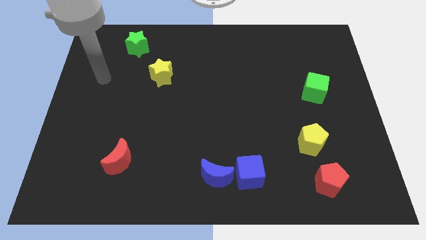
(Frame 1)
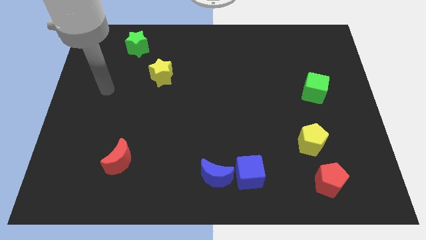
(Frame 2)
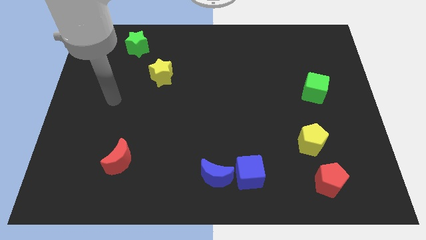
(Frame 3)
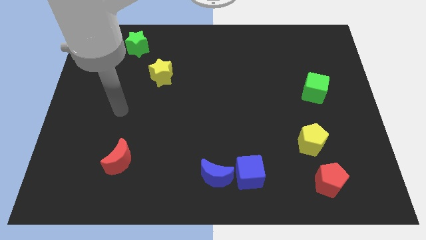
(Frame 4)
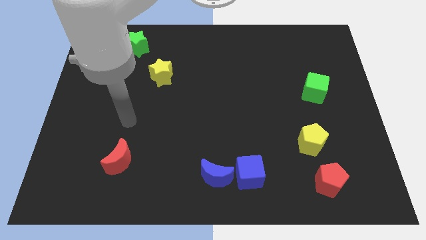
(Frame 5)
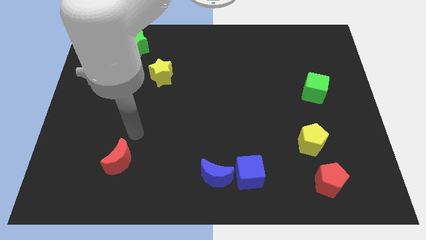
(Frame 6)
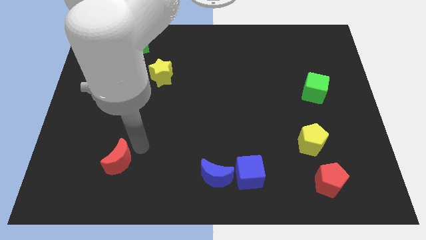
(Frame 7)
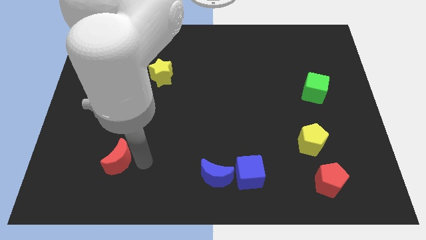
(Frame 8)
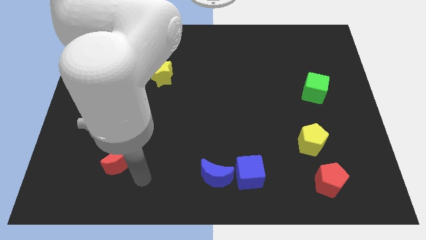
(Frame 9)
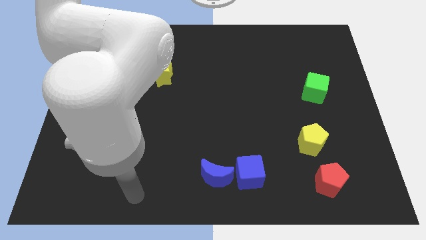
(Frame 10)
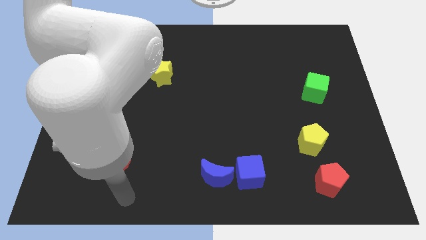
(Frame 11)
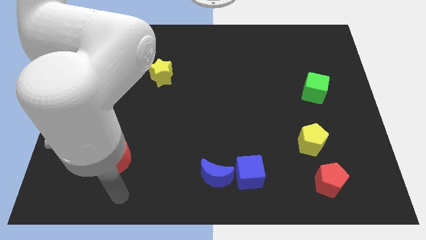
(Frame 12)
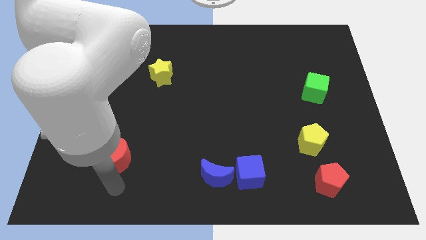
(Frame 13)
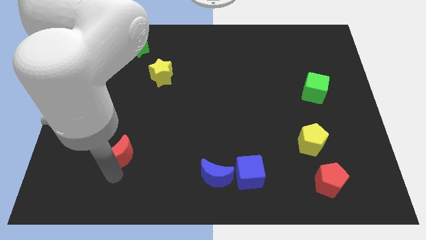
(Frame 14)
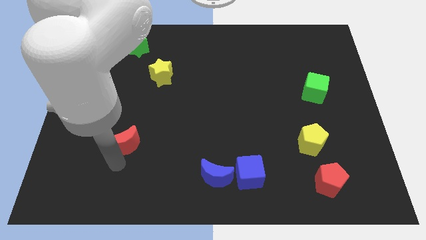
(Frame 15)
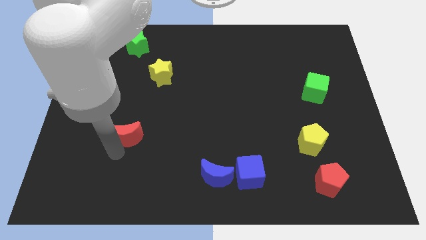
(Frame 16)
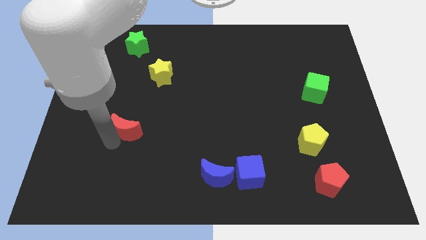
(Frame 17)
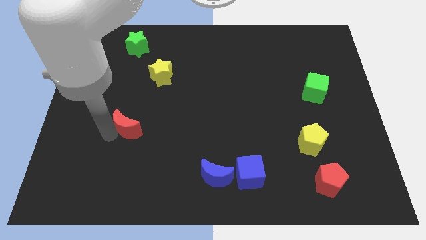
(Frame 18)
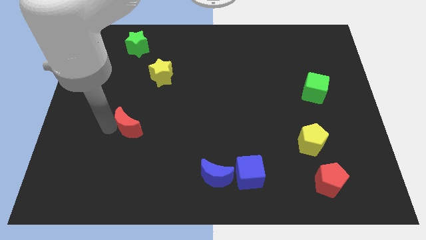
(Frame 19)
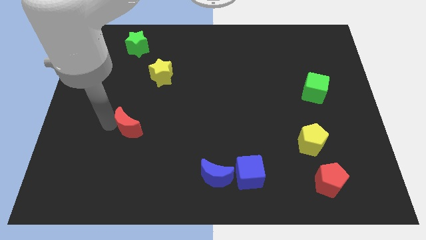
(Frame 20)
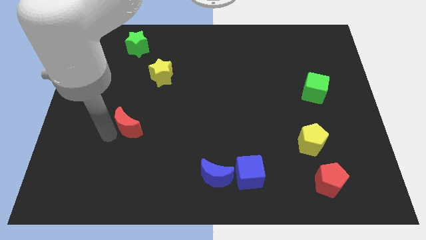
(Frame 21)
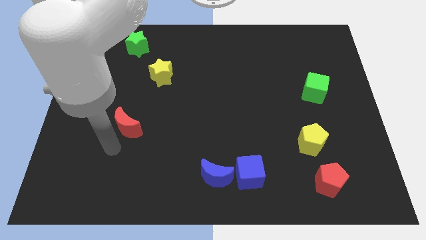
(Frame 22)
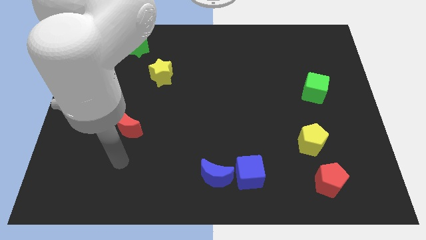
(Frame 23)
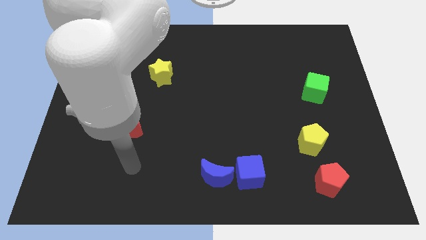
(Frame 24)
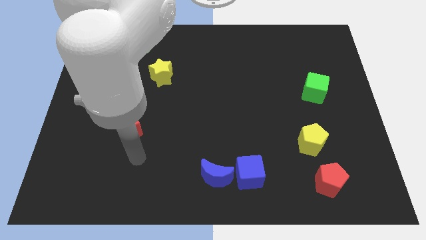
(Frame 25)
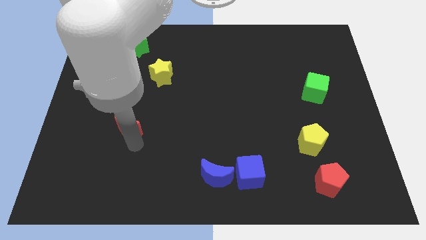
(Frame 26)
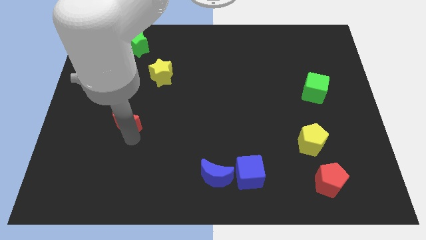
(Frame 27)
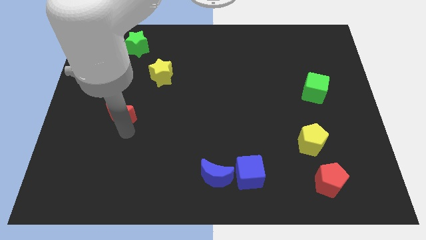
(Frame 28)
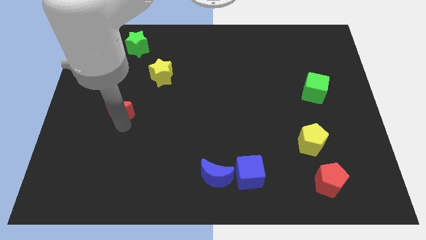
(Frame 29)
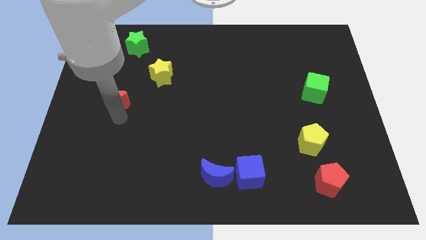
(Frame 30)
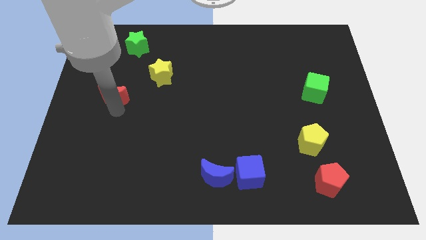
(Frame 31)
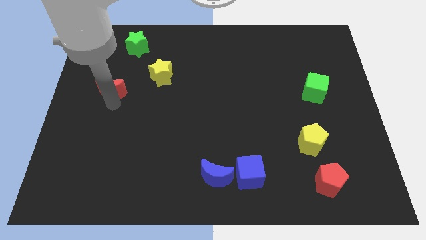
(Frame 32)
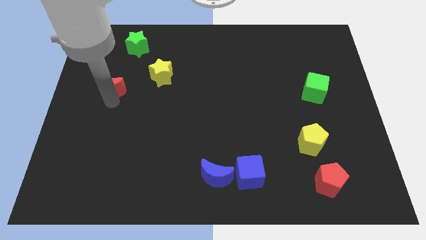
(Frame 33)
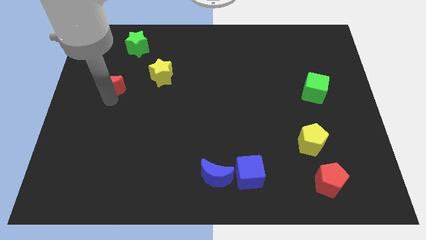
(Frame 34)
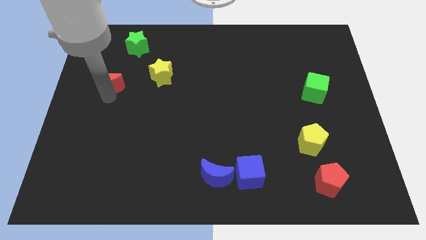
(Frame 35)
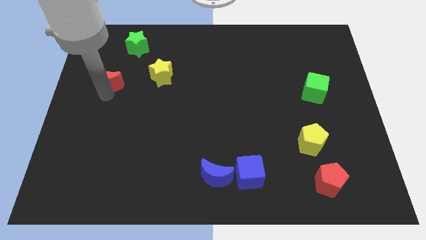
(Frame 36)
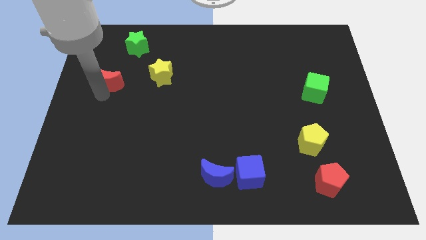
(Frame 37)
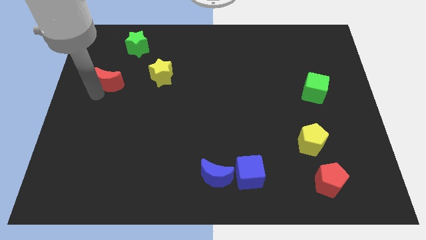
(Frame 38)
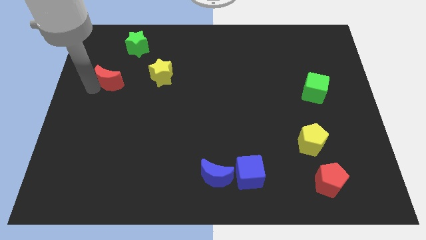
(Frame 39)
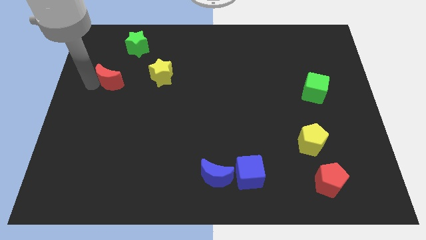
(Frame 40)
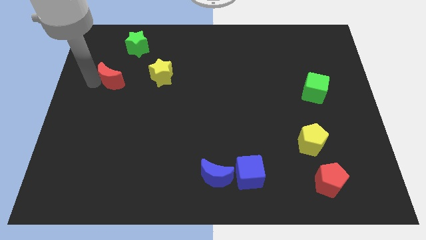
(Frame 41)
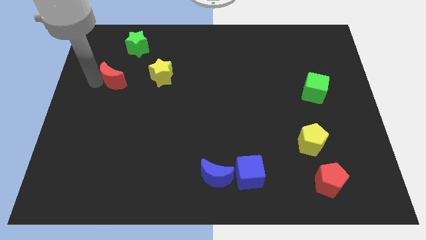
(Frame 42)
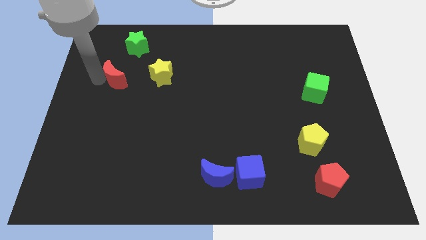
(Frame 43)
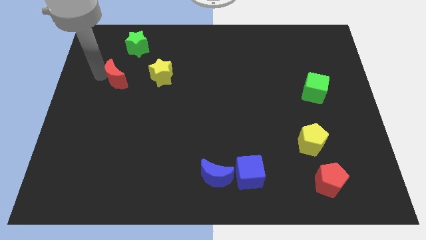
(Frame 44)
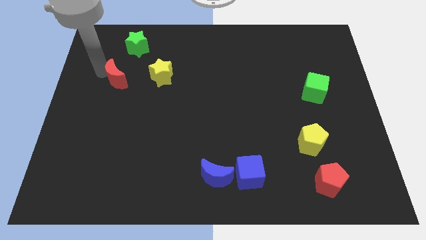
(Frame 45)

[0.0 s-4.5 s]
push the red crsecent to the left of the yellow star

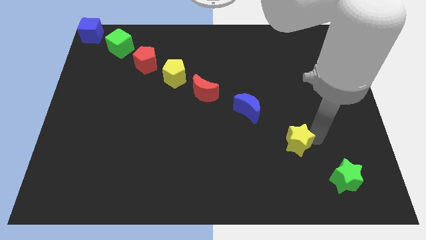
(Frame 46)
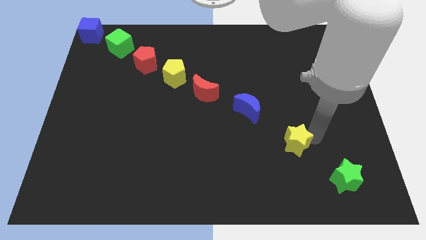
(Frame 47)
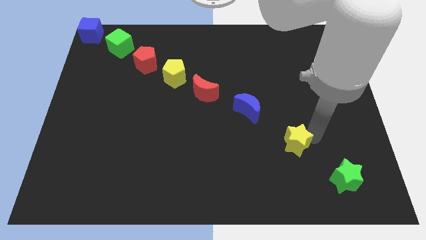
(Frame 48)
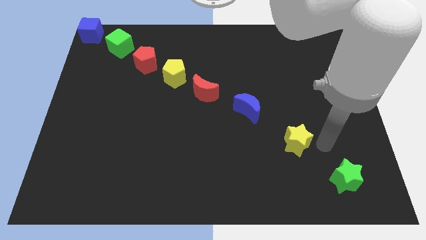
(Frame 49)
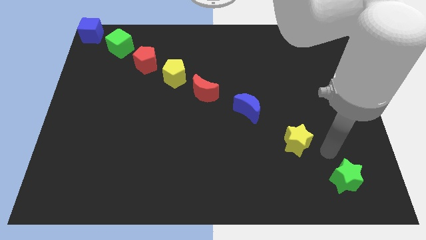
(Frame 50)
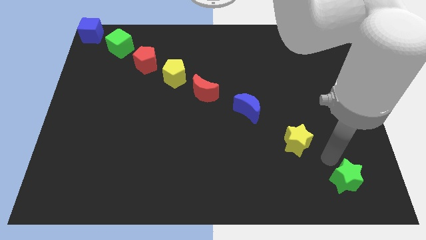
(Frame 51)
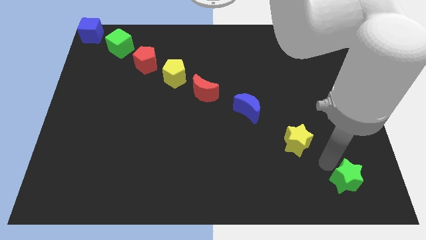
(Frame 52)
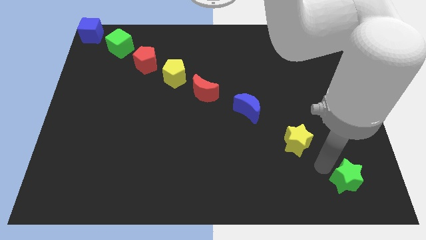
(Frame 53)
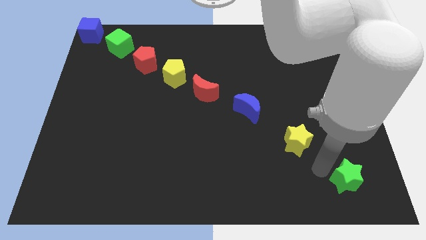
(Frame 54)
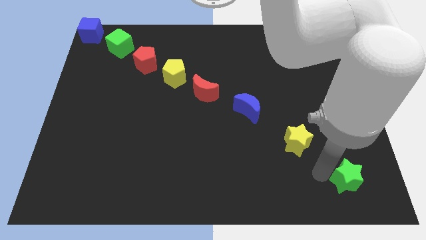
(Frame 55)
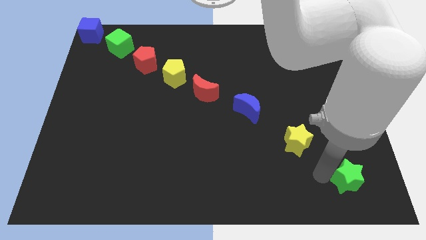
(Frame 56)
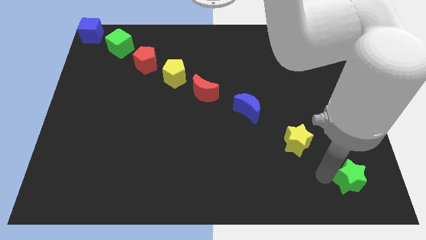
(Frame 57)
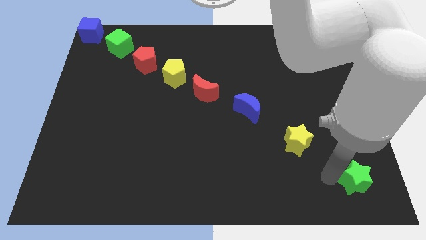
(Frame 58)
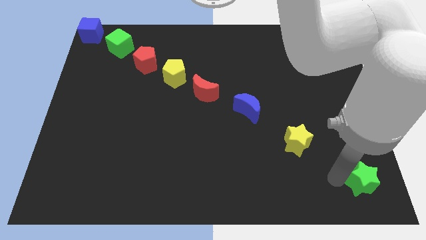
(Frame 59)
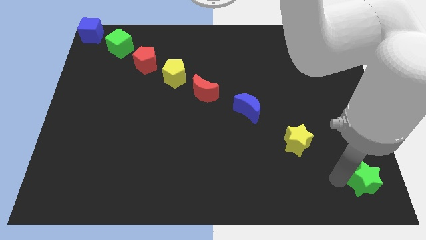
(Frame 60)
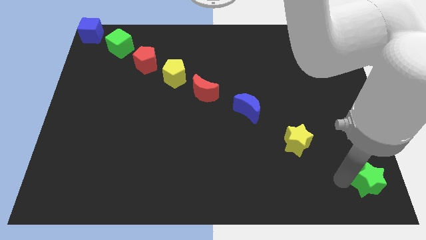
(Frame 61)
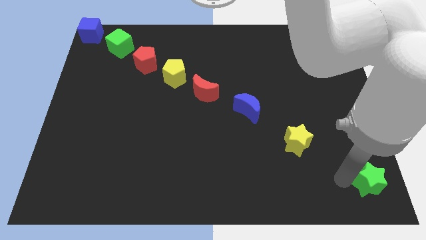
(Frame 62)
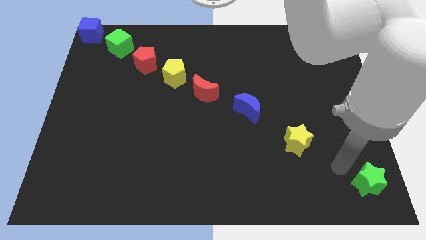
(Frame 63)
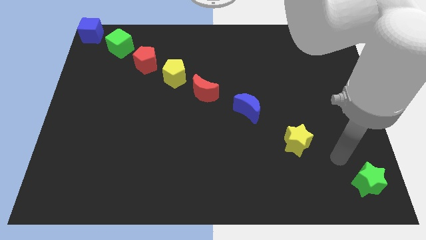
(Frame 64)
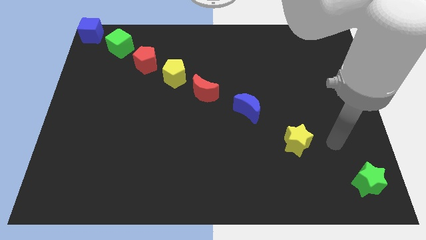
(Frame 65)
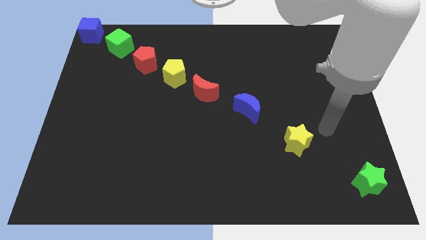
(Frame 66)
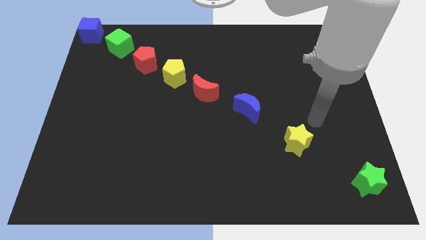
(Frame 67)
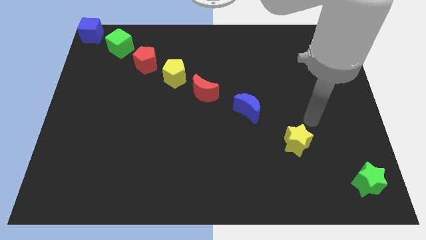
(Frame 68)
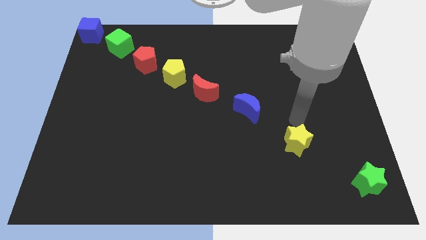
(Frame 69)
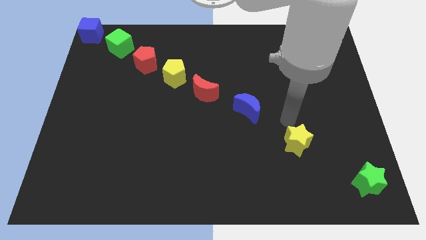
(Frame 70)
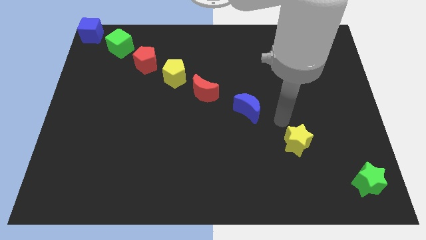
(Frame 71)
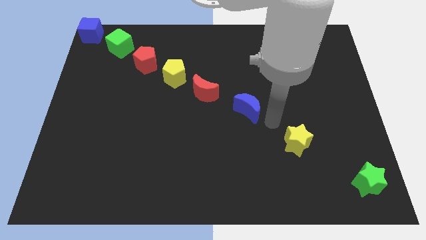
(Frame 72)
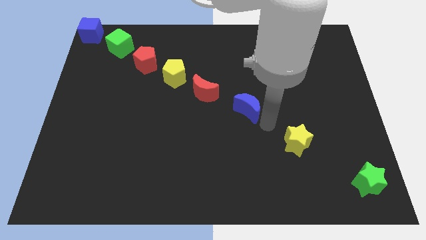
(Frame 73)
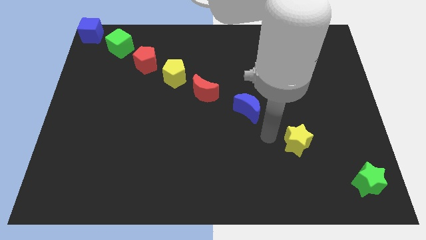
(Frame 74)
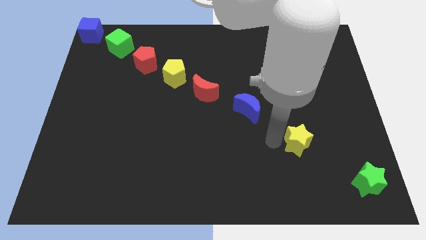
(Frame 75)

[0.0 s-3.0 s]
slide the green star towards the bottom right corner of the board

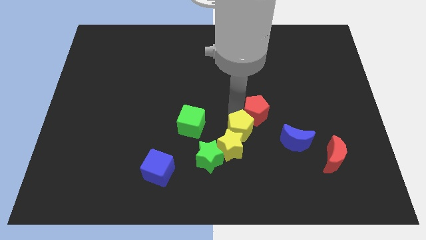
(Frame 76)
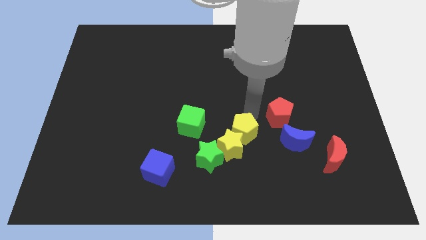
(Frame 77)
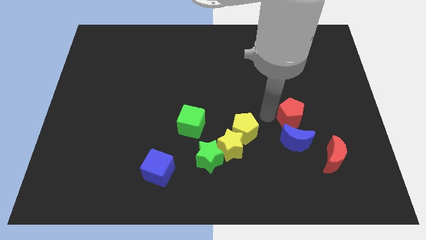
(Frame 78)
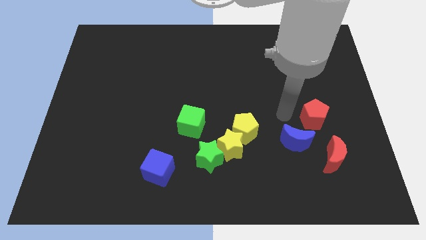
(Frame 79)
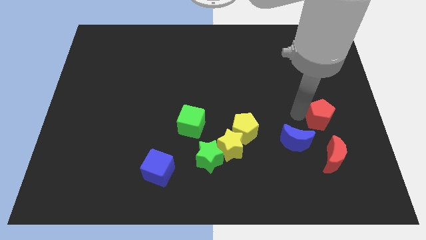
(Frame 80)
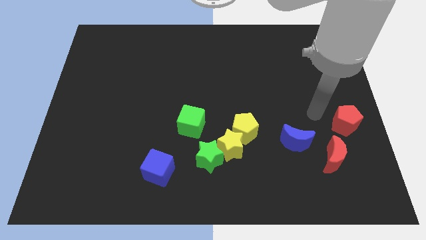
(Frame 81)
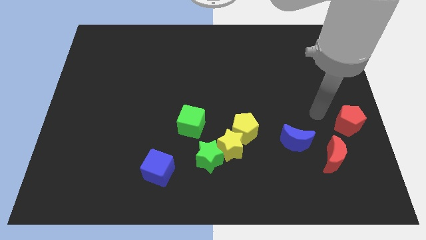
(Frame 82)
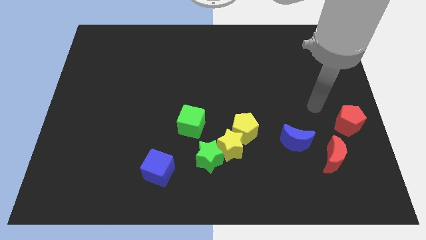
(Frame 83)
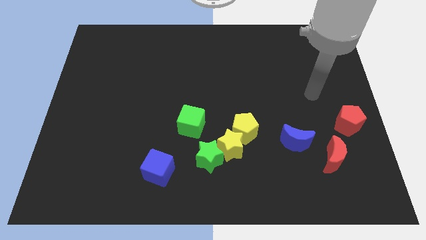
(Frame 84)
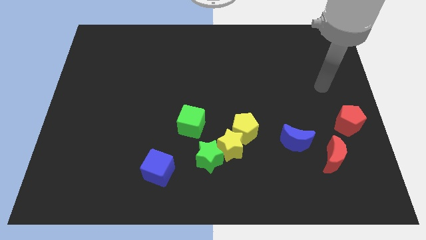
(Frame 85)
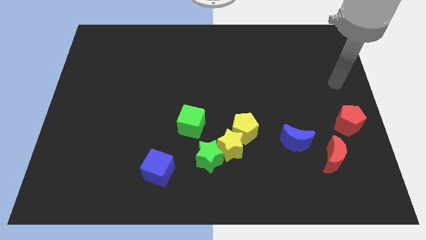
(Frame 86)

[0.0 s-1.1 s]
place the red pentagon to the top right of the red moon

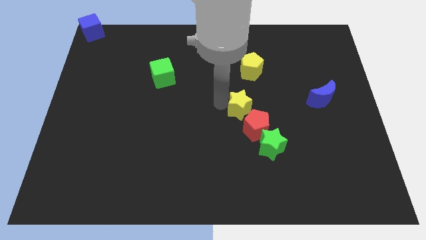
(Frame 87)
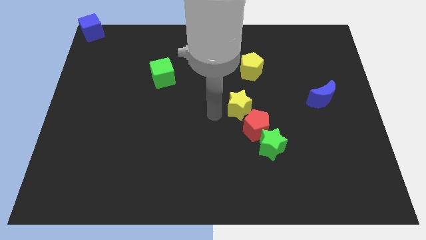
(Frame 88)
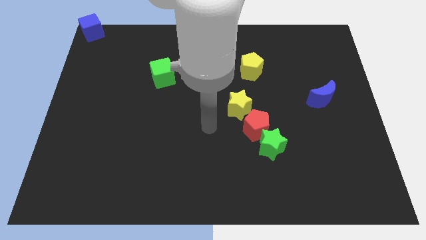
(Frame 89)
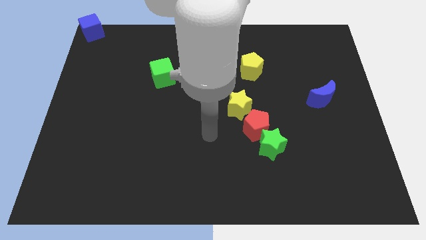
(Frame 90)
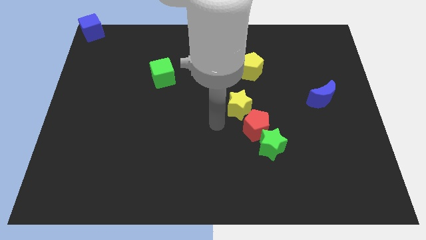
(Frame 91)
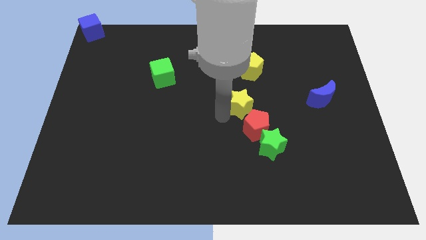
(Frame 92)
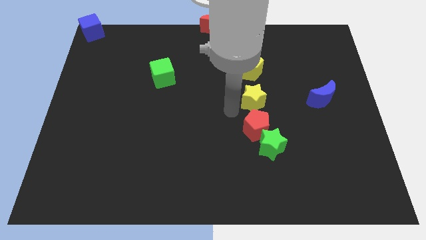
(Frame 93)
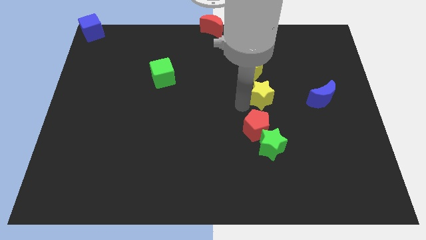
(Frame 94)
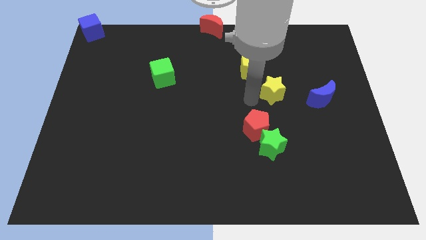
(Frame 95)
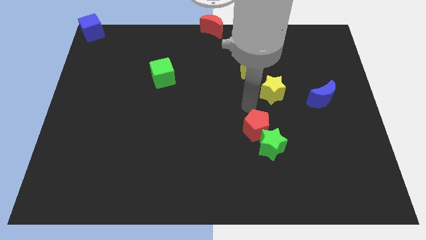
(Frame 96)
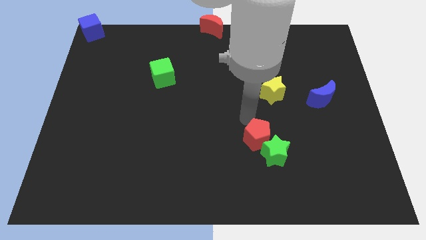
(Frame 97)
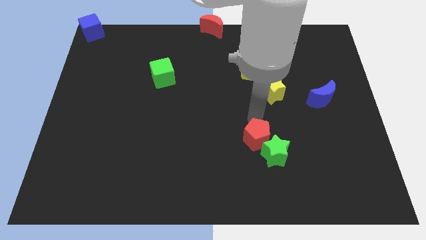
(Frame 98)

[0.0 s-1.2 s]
separate the red pentagon and yellow star
